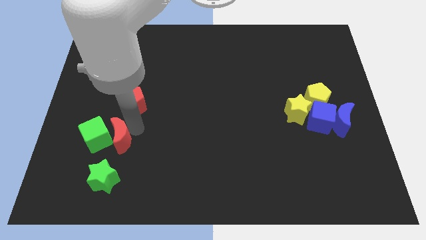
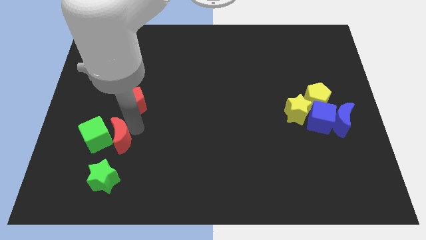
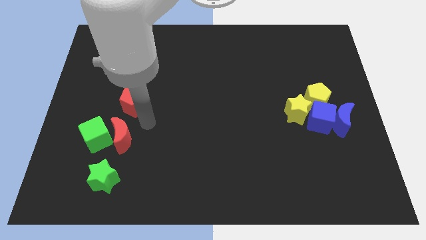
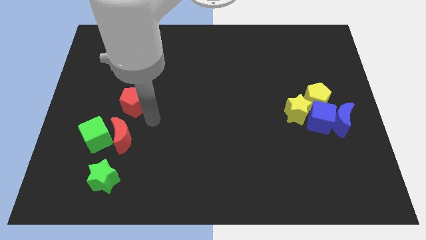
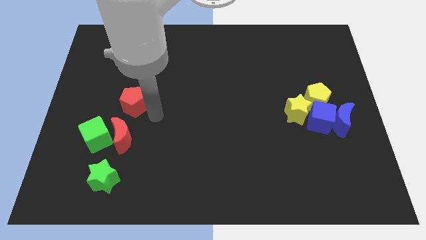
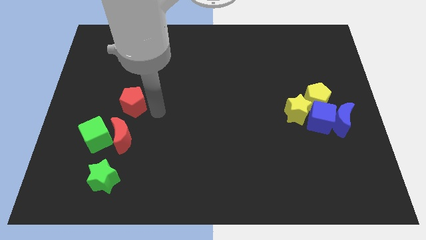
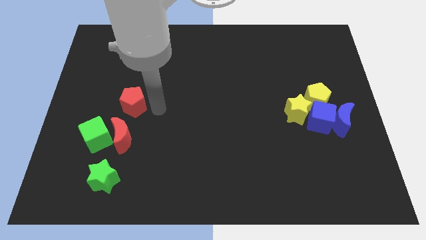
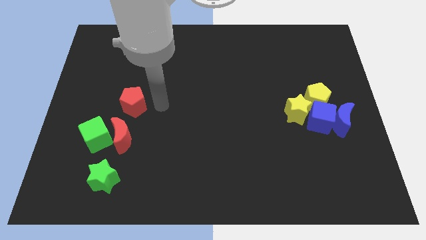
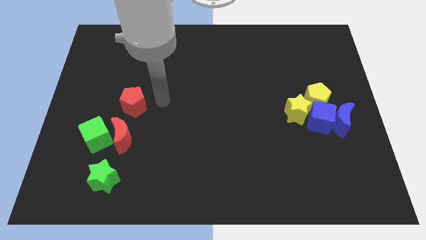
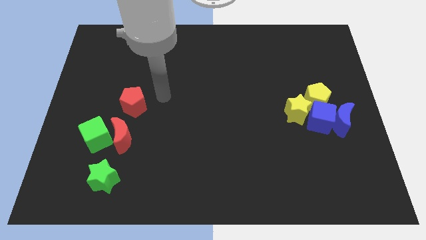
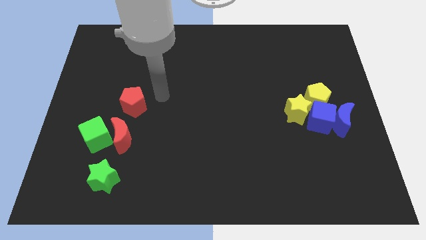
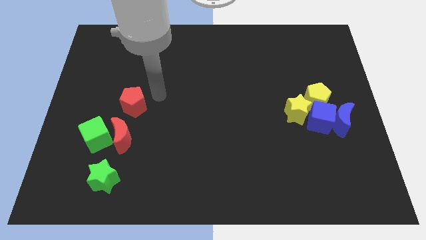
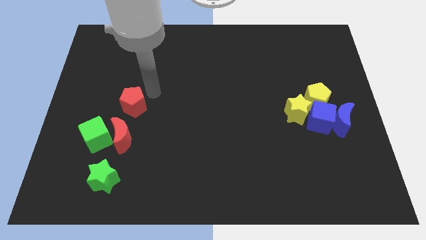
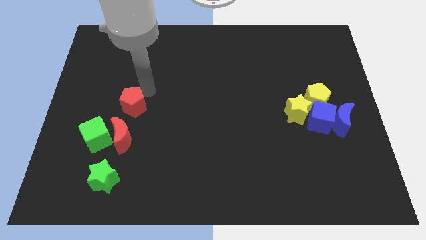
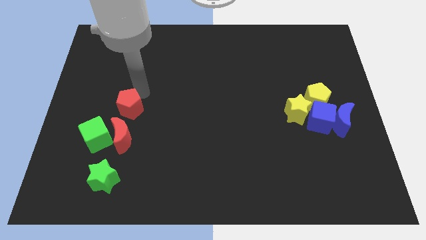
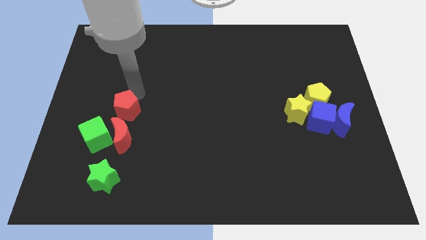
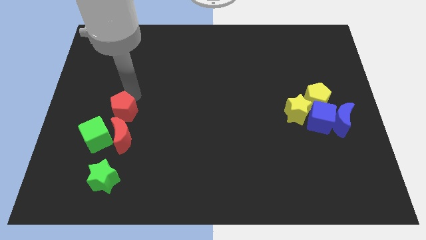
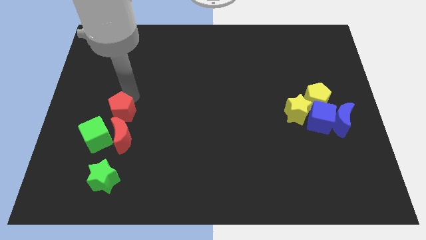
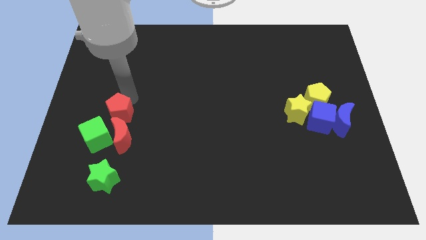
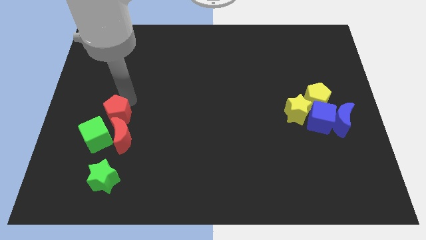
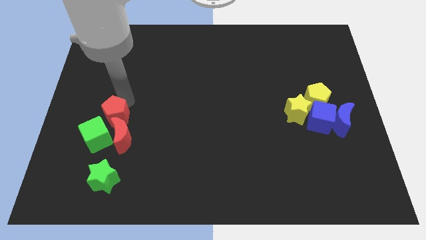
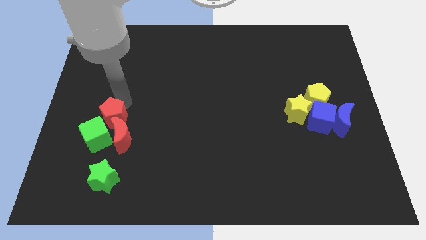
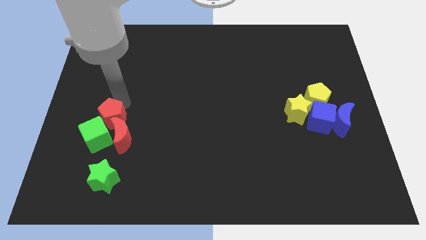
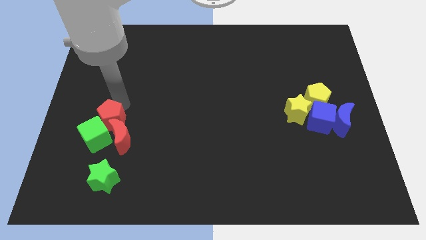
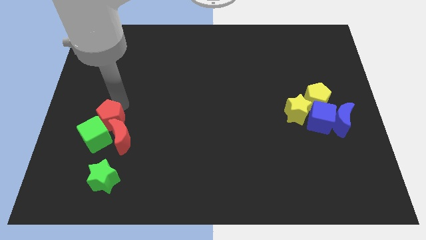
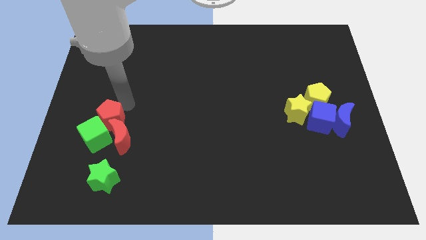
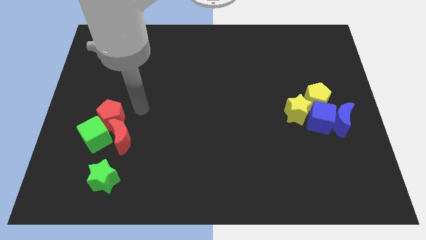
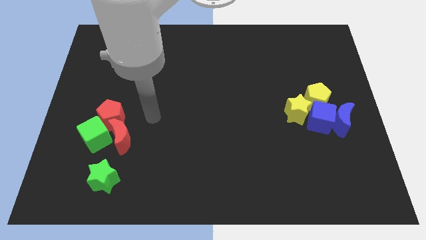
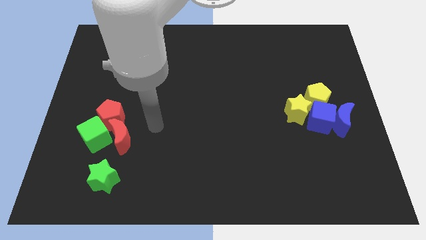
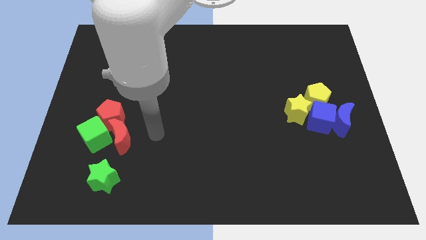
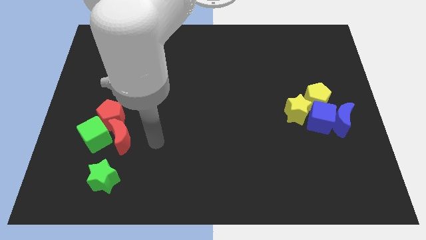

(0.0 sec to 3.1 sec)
move the red pentagon into the red crescent and green cube

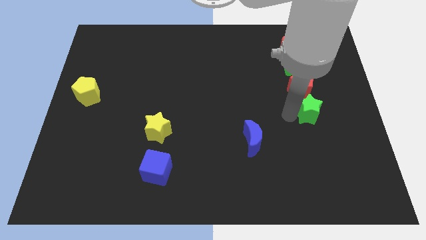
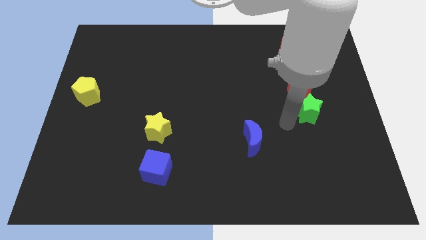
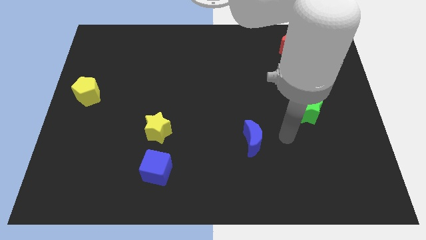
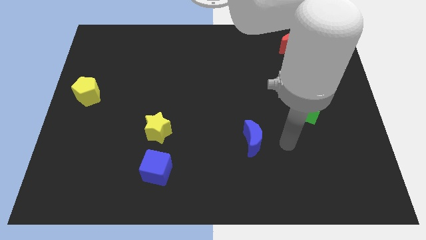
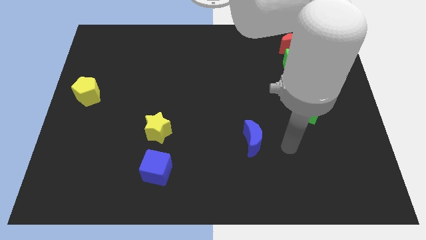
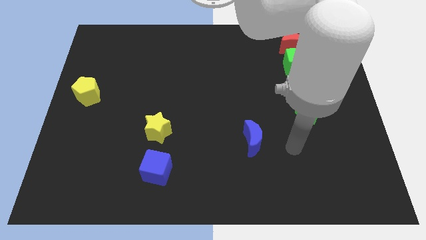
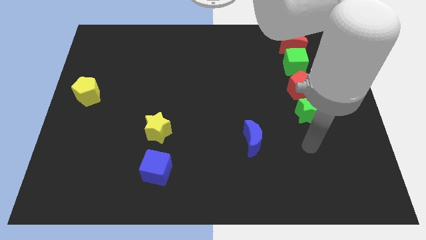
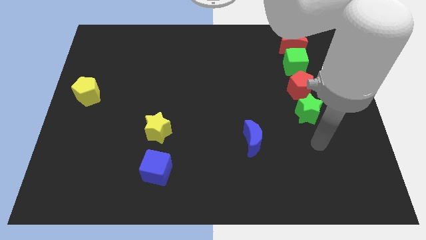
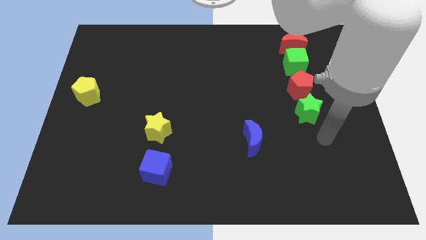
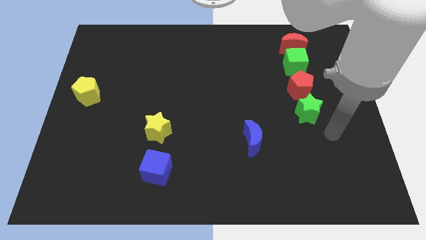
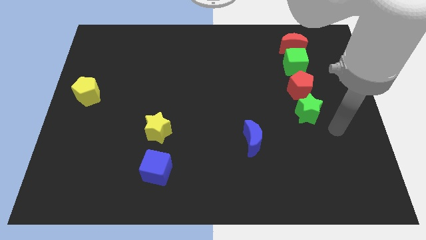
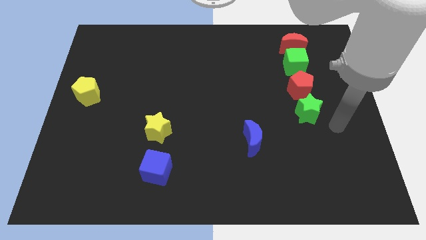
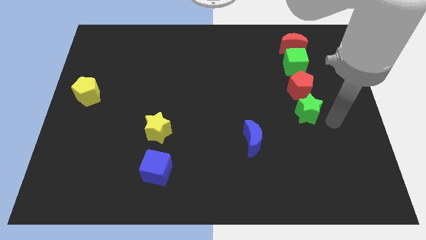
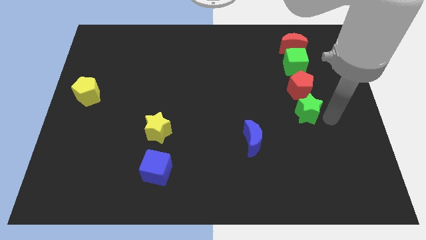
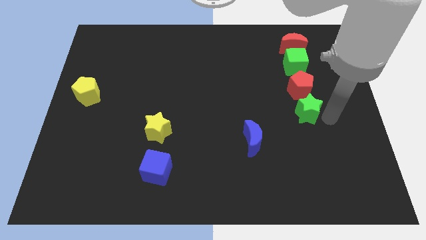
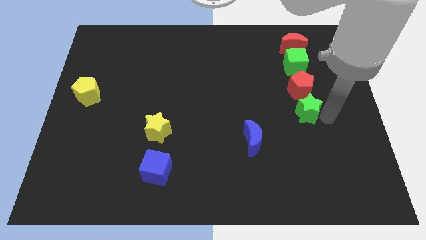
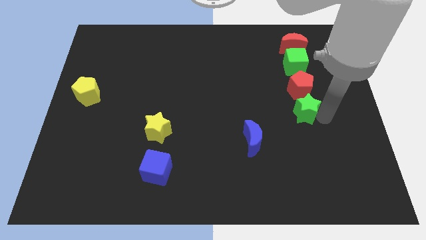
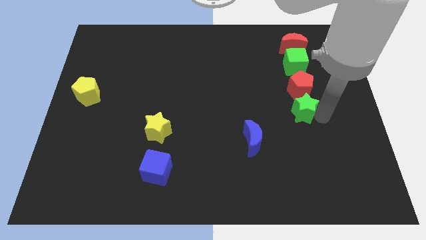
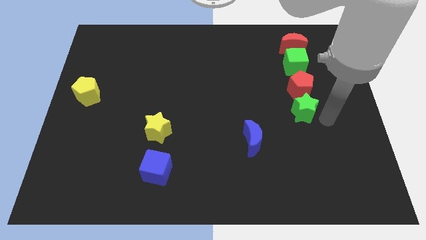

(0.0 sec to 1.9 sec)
move the green star to the bottom side of the red pentagon

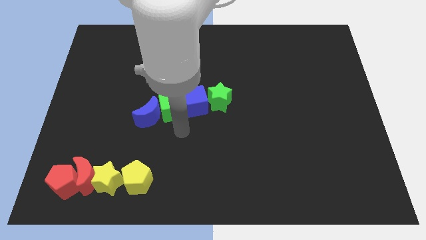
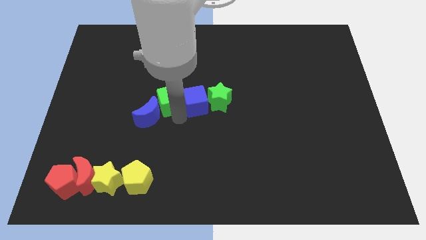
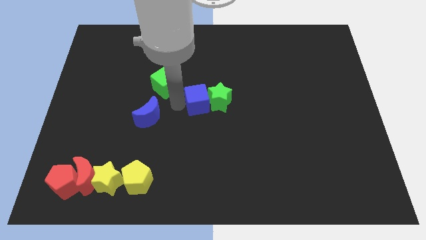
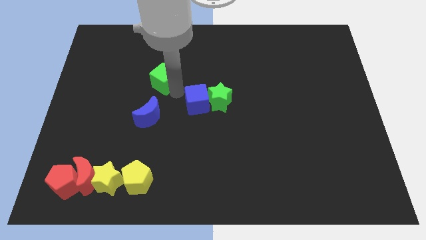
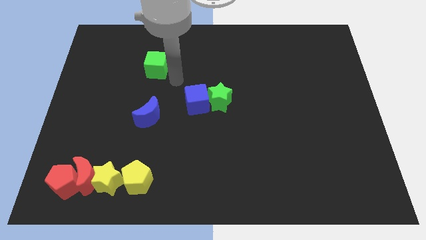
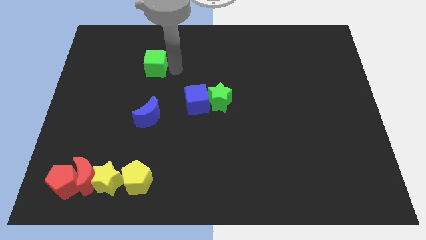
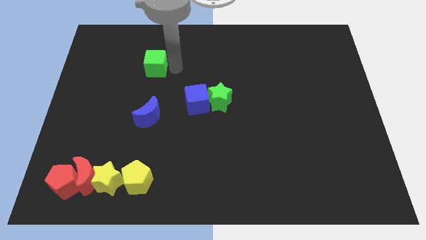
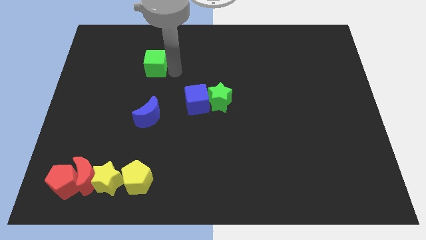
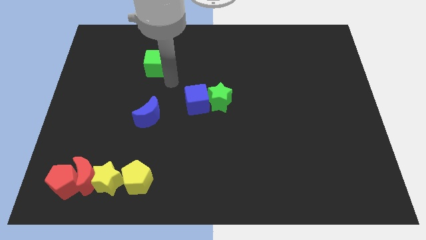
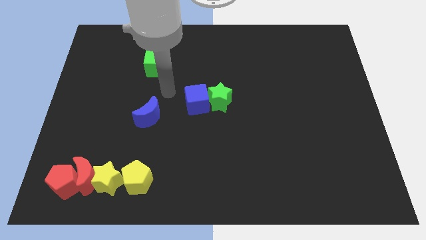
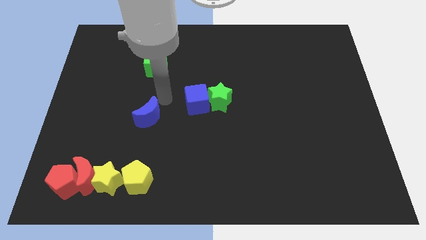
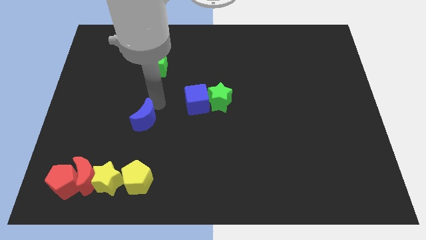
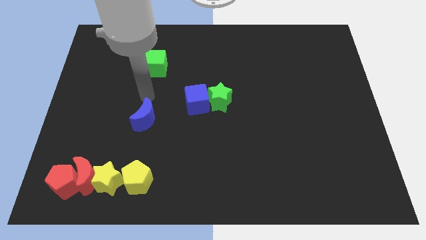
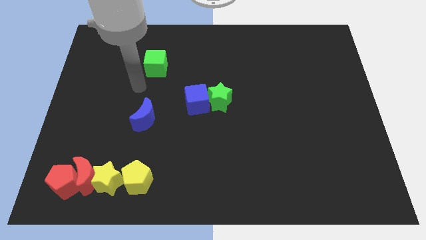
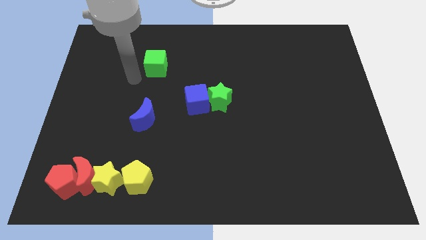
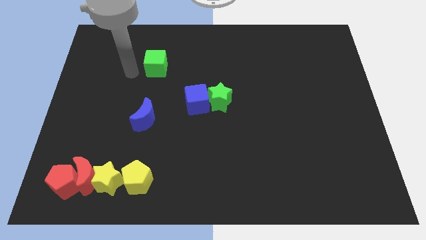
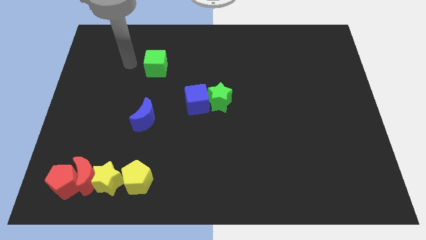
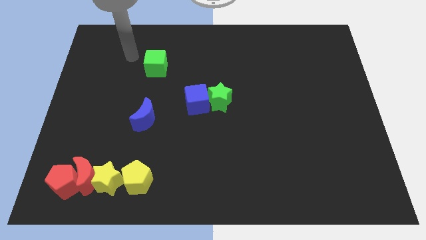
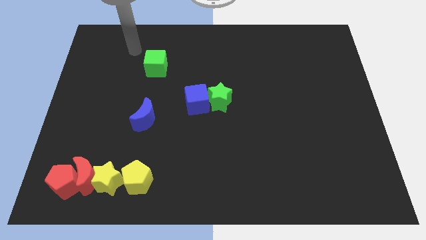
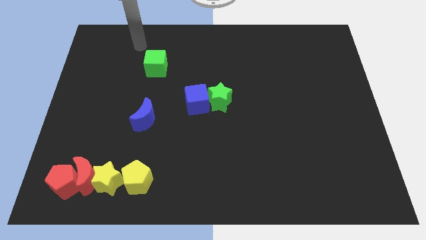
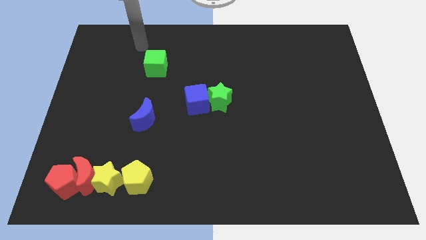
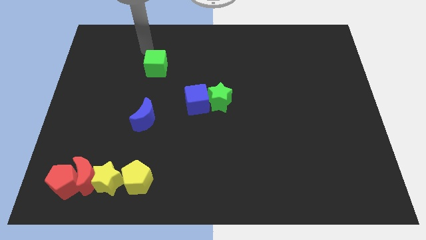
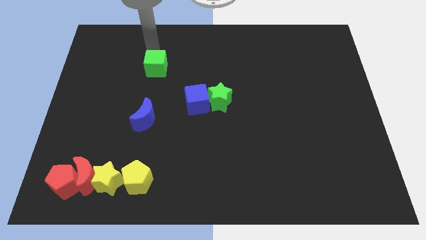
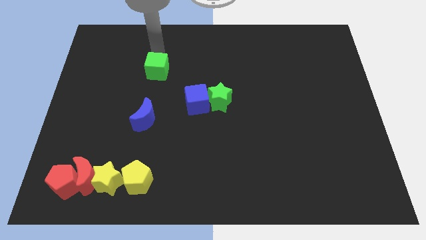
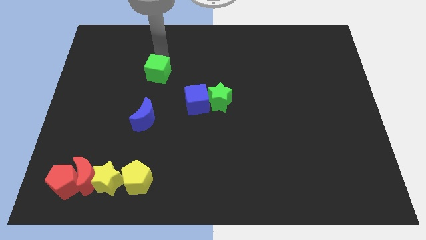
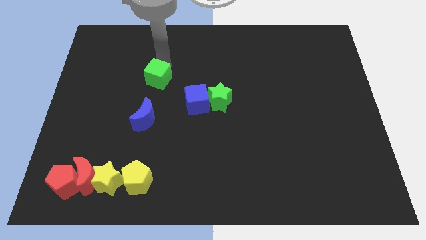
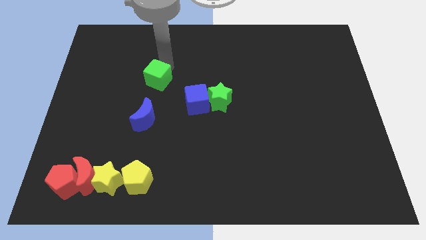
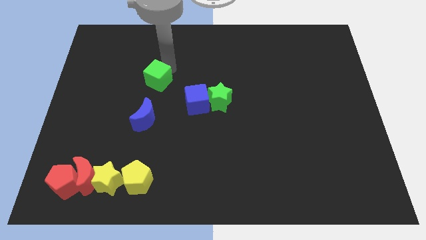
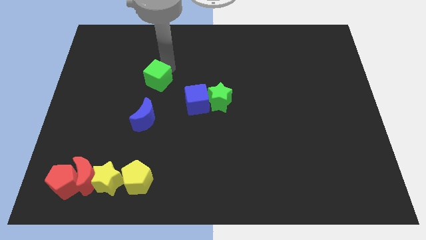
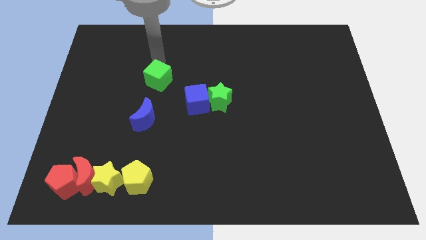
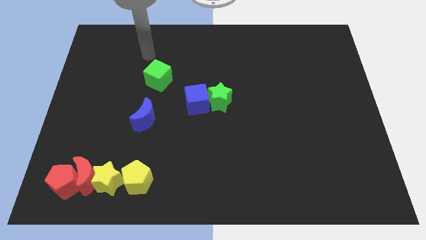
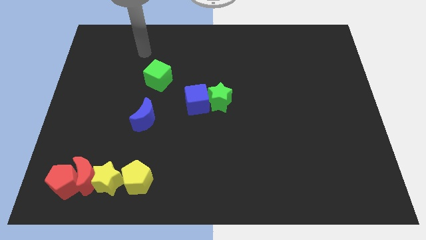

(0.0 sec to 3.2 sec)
separate the green cube from the blue blocks

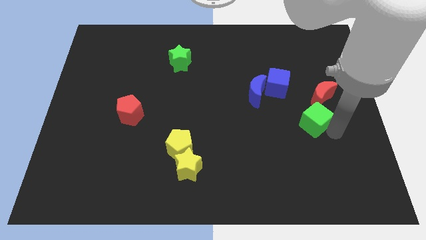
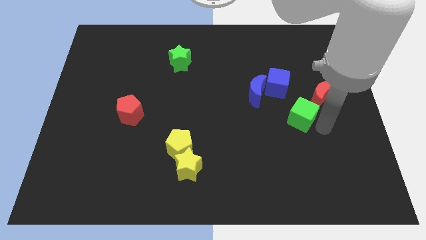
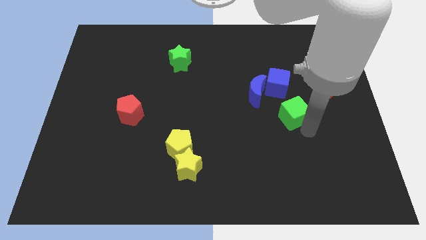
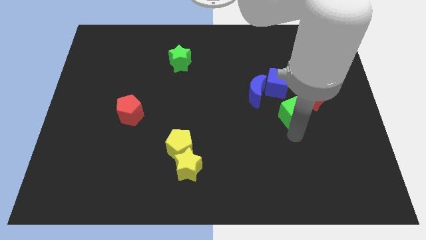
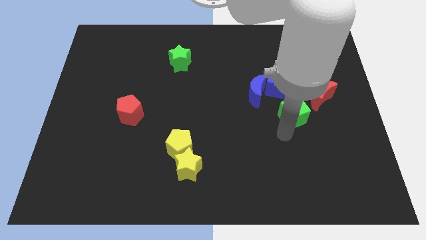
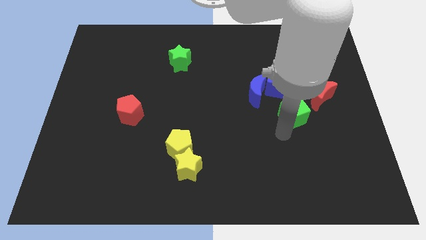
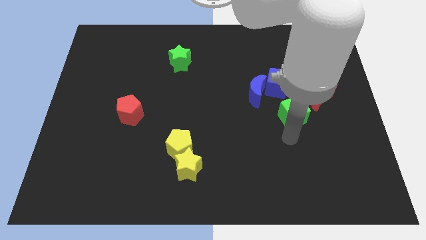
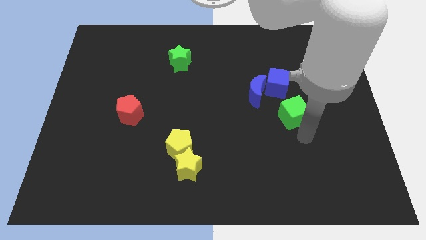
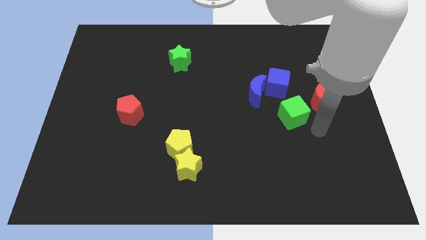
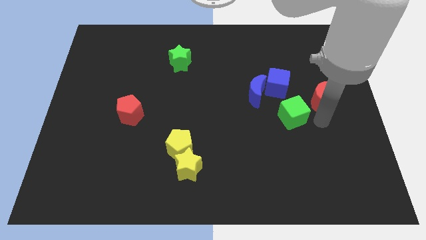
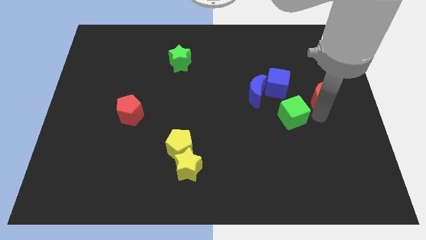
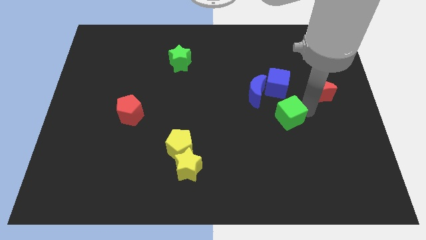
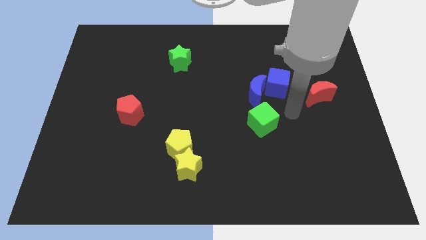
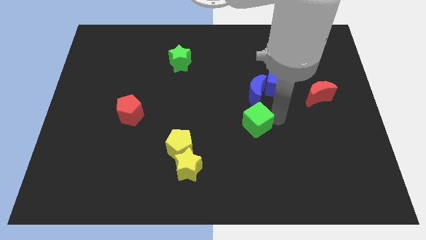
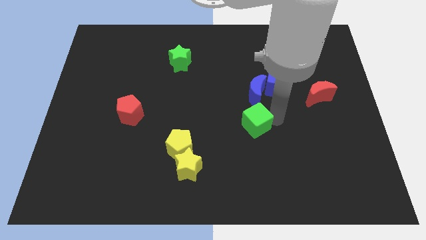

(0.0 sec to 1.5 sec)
move green cube to the bottom of the blue moon
